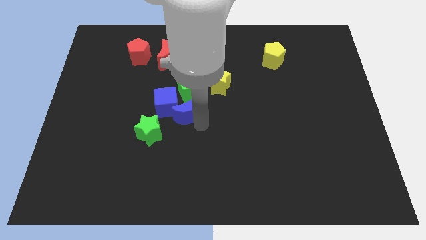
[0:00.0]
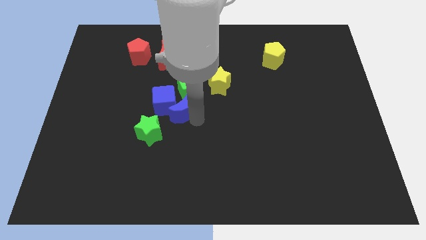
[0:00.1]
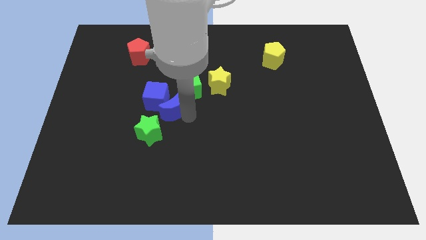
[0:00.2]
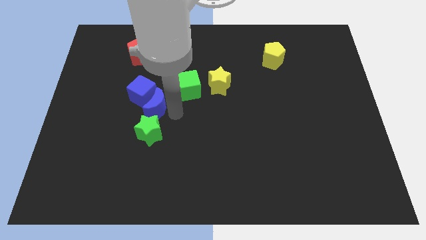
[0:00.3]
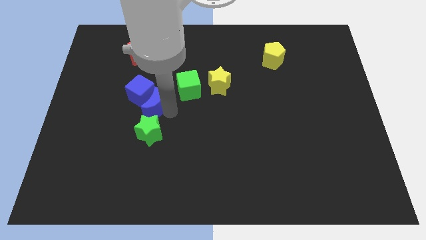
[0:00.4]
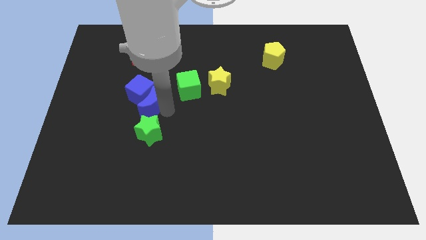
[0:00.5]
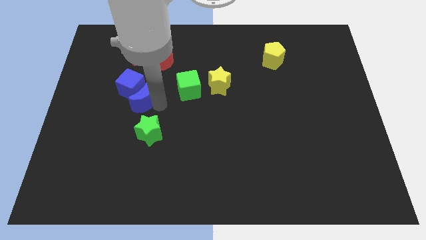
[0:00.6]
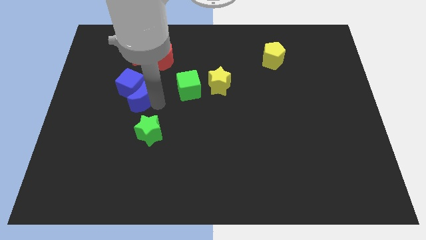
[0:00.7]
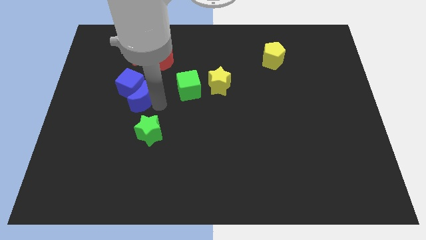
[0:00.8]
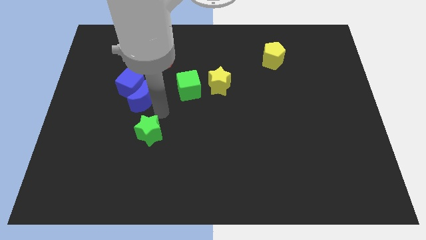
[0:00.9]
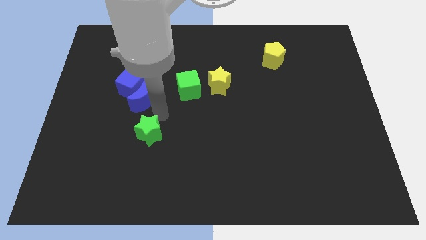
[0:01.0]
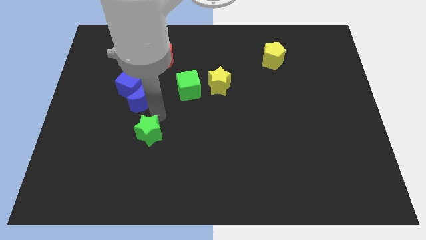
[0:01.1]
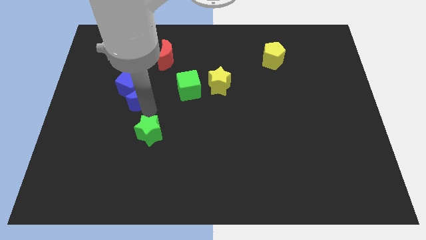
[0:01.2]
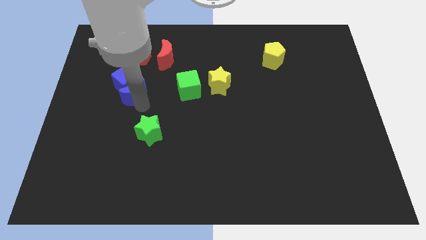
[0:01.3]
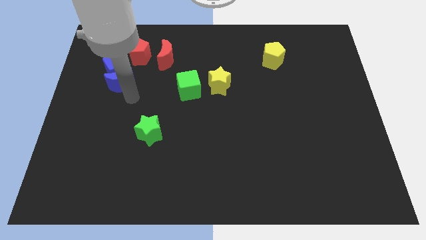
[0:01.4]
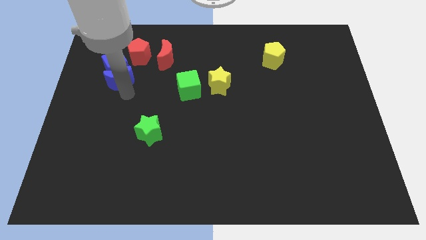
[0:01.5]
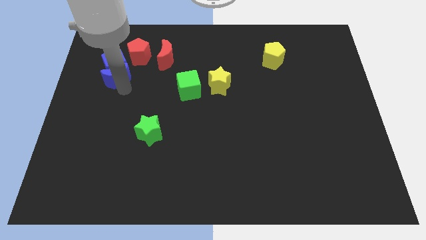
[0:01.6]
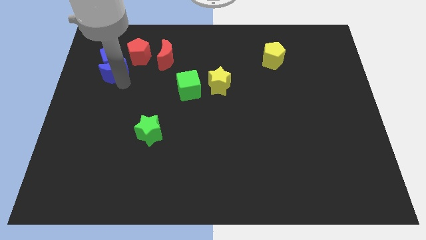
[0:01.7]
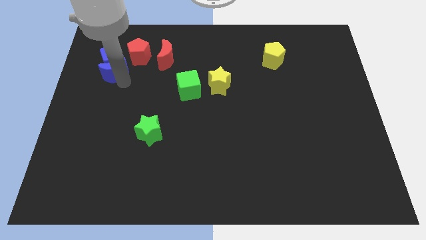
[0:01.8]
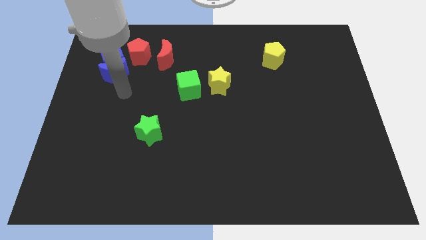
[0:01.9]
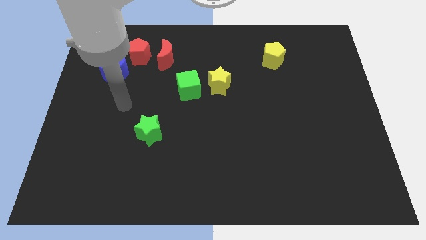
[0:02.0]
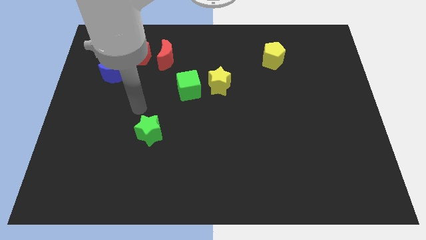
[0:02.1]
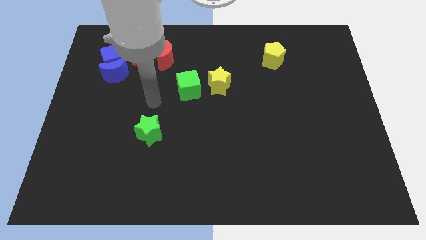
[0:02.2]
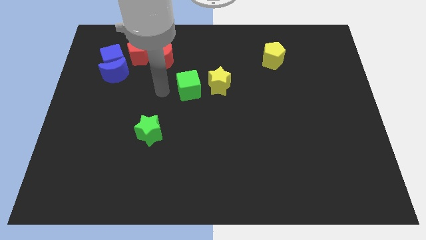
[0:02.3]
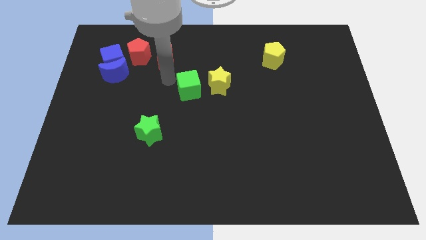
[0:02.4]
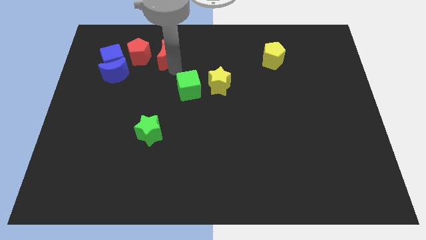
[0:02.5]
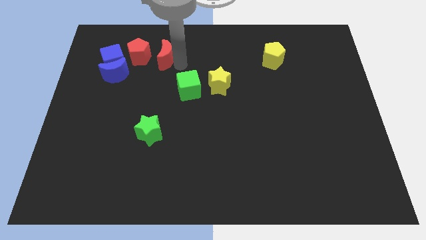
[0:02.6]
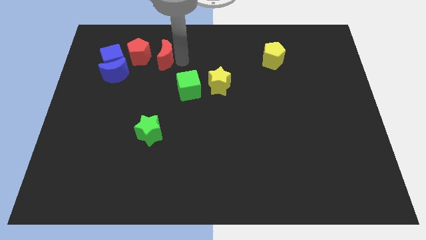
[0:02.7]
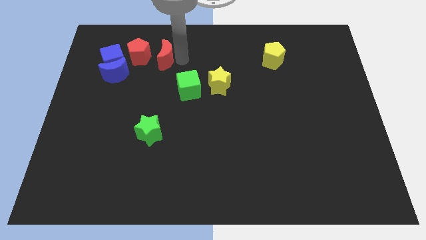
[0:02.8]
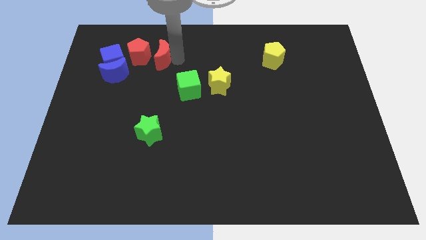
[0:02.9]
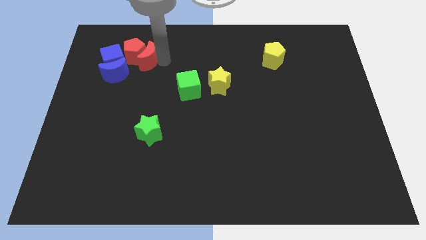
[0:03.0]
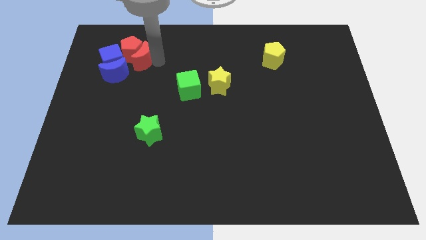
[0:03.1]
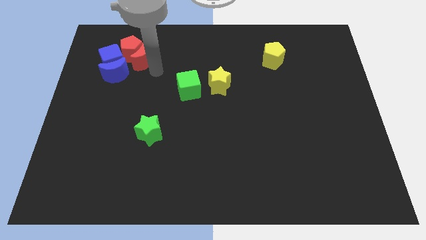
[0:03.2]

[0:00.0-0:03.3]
push the red moon to the right side of the blue moon

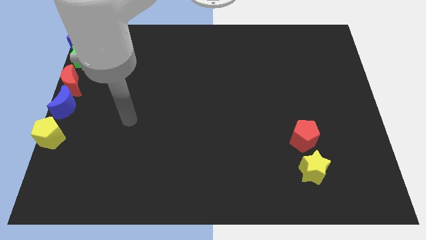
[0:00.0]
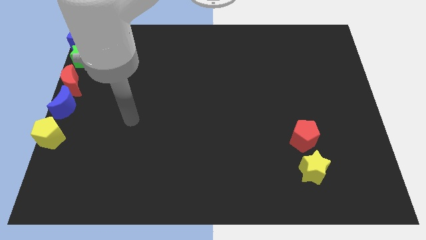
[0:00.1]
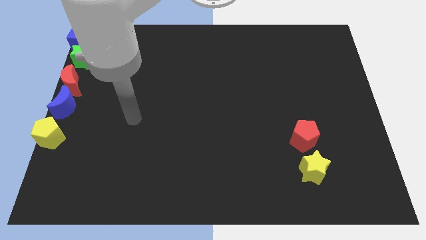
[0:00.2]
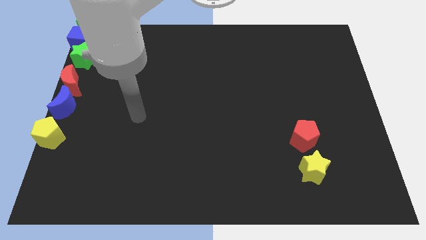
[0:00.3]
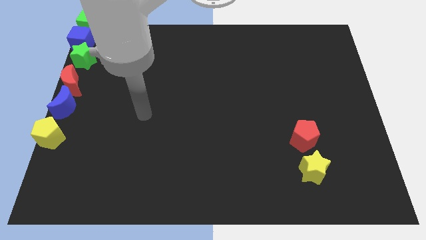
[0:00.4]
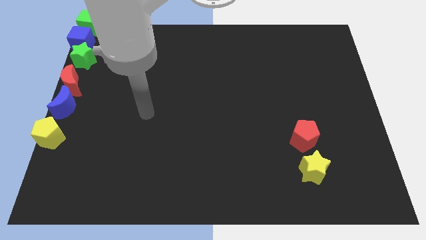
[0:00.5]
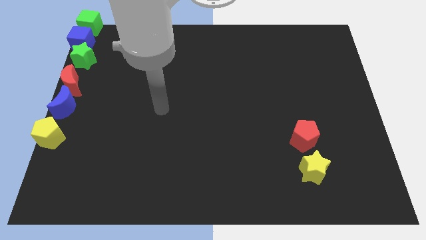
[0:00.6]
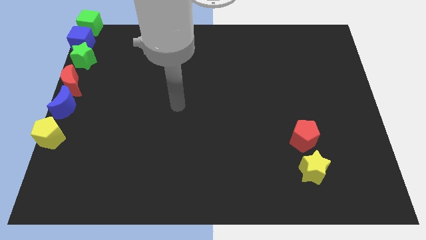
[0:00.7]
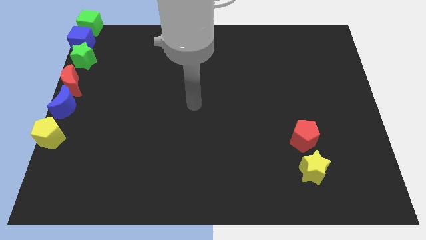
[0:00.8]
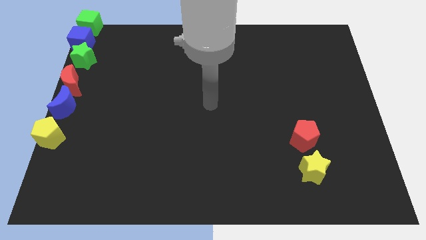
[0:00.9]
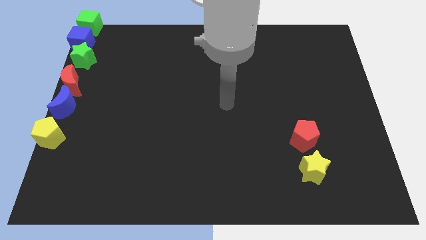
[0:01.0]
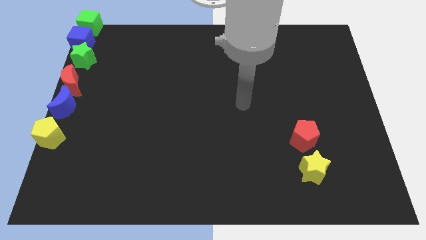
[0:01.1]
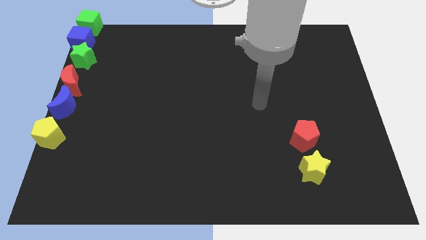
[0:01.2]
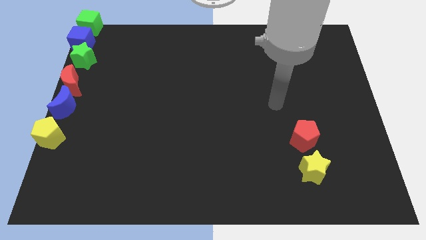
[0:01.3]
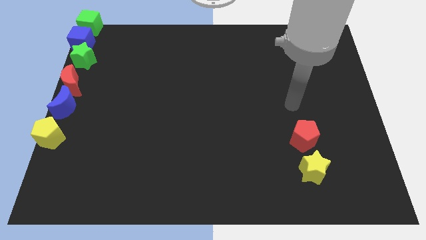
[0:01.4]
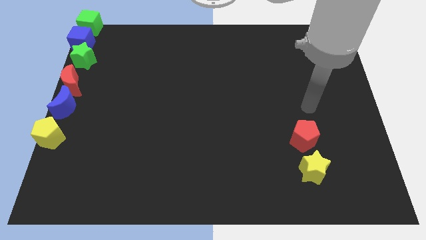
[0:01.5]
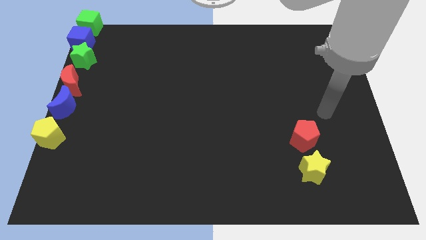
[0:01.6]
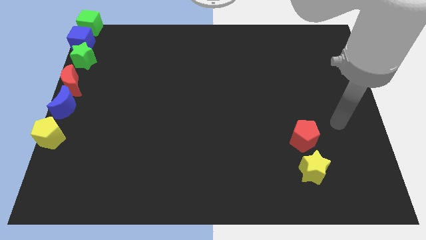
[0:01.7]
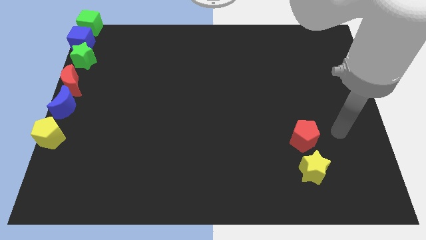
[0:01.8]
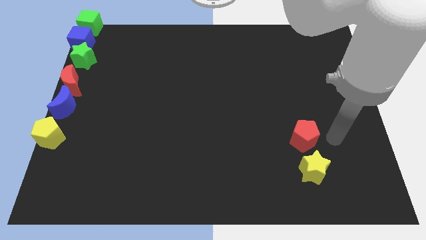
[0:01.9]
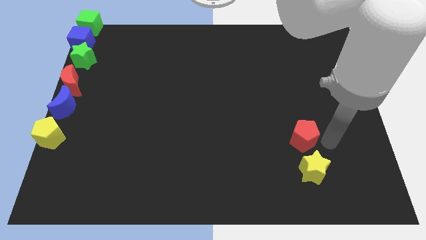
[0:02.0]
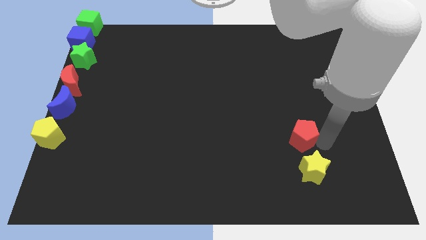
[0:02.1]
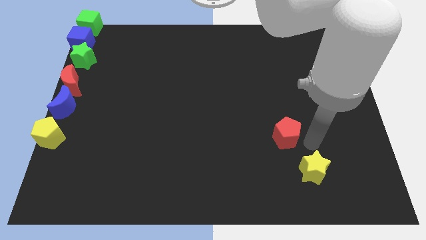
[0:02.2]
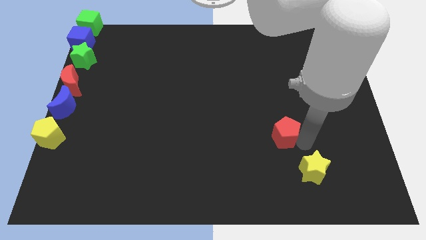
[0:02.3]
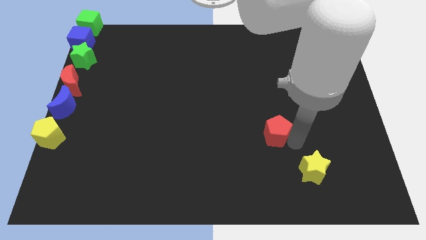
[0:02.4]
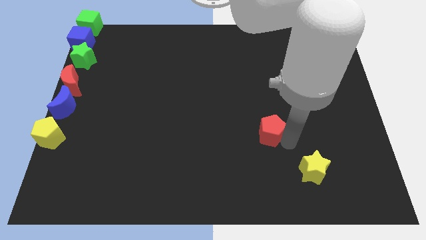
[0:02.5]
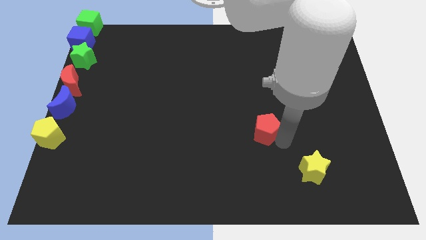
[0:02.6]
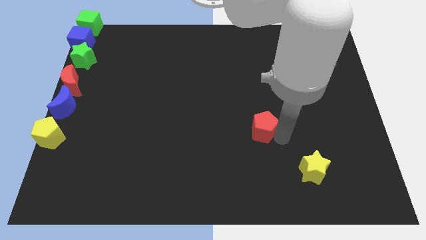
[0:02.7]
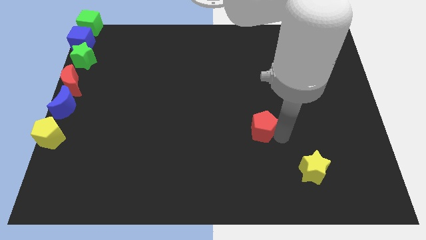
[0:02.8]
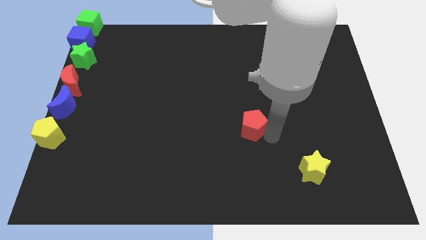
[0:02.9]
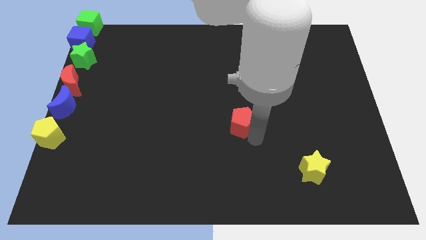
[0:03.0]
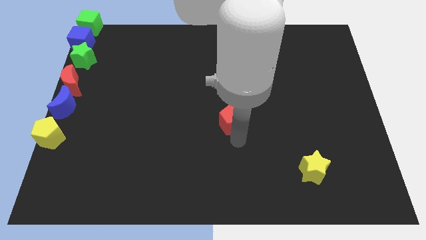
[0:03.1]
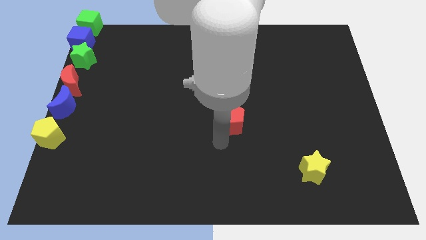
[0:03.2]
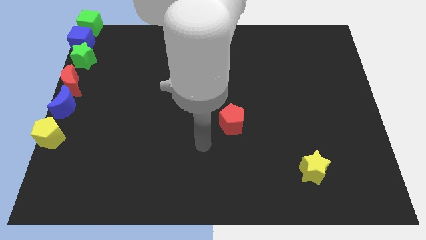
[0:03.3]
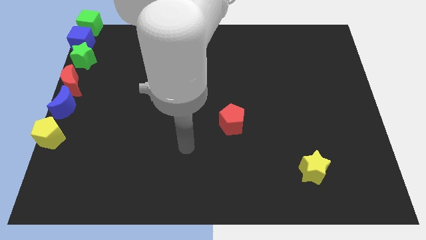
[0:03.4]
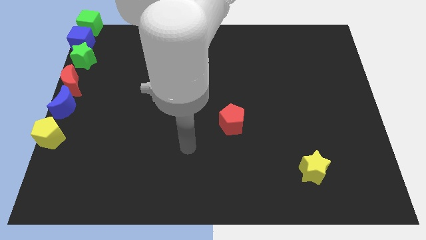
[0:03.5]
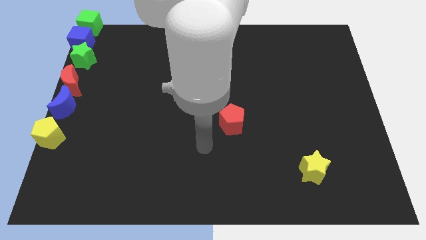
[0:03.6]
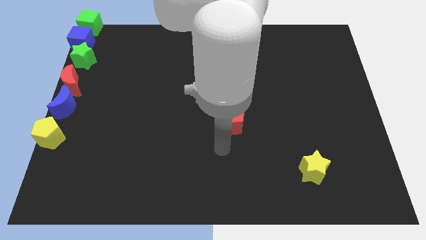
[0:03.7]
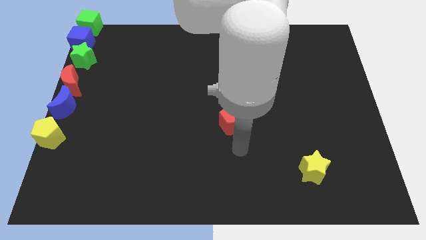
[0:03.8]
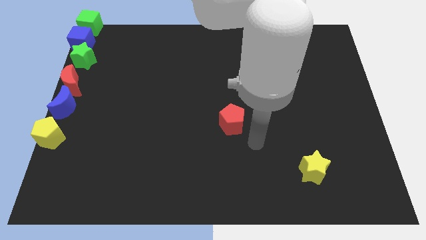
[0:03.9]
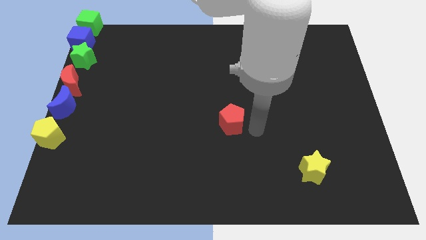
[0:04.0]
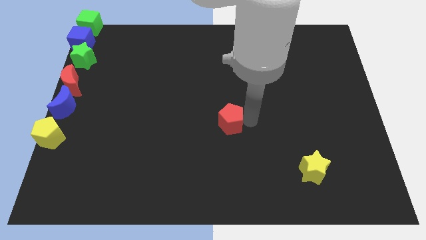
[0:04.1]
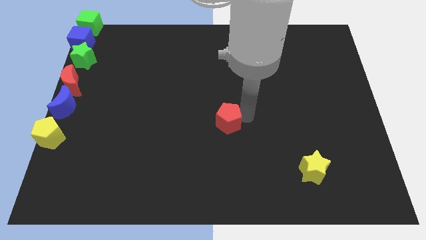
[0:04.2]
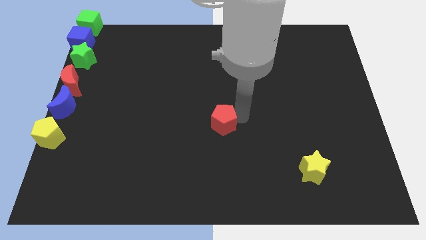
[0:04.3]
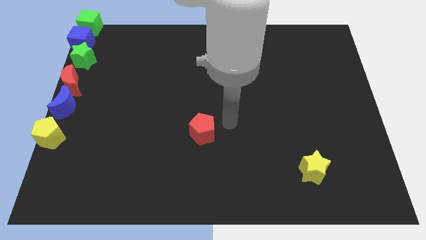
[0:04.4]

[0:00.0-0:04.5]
move the red pentagon slightly to the left of center

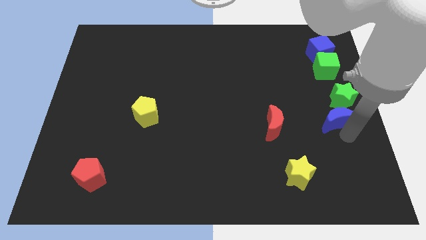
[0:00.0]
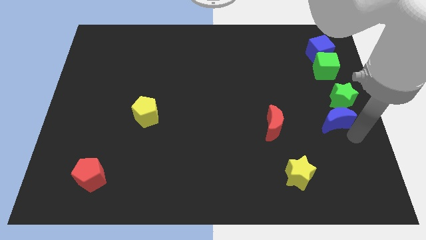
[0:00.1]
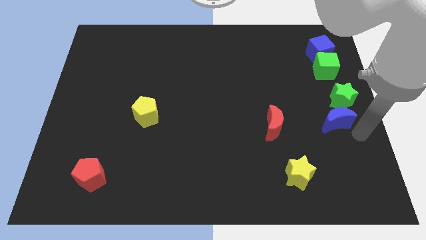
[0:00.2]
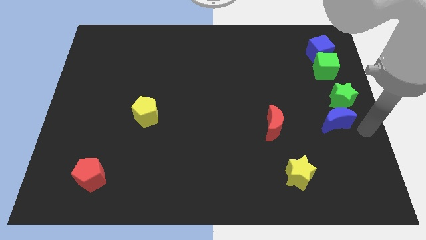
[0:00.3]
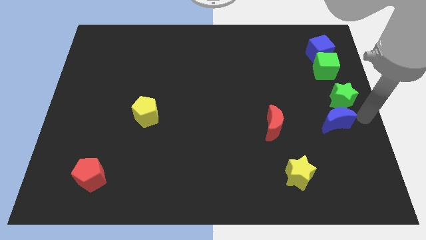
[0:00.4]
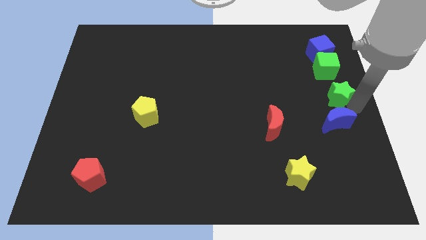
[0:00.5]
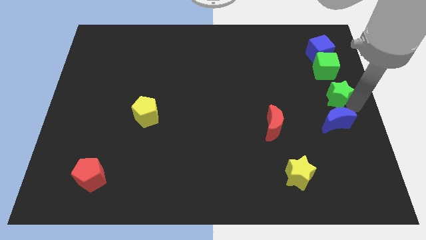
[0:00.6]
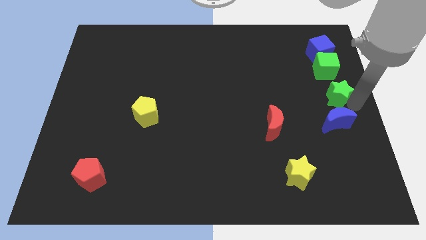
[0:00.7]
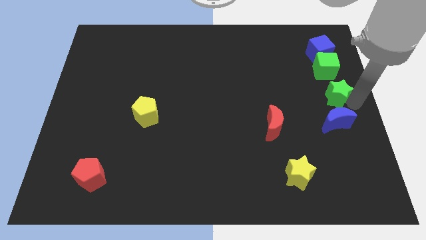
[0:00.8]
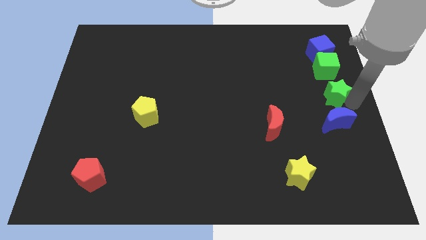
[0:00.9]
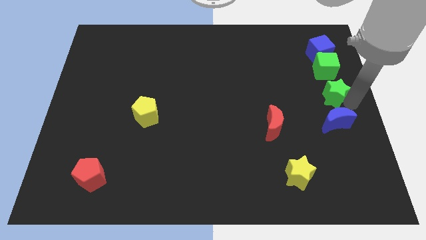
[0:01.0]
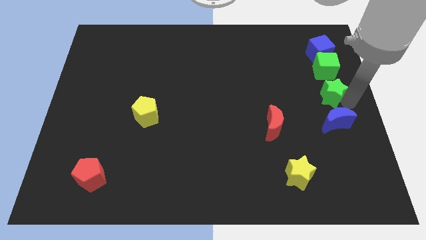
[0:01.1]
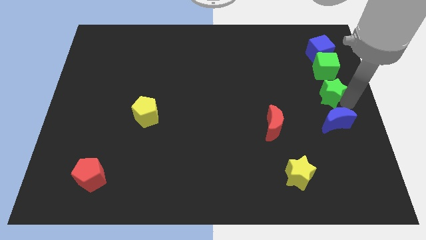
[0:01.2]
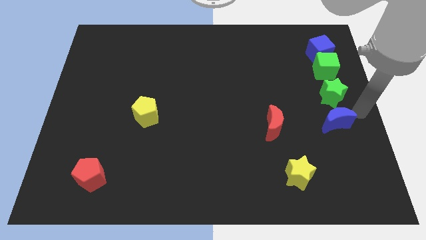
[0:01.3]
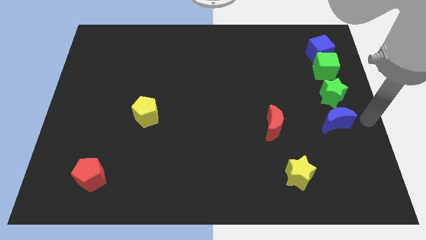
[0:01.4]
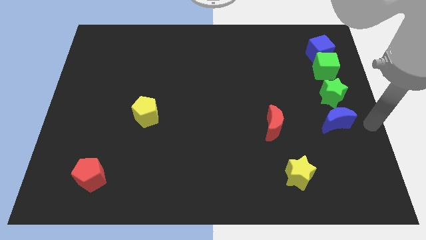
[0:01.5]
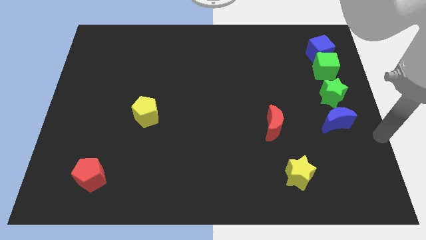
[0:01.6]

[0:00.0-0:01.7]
slightly push the green star
